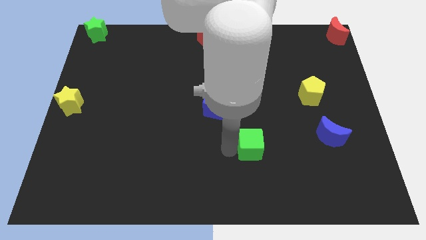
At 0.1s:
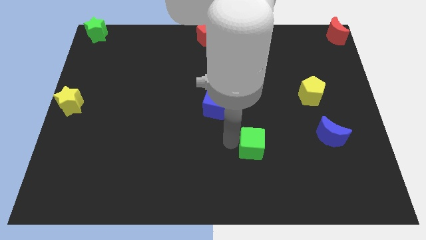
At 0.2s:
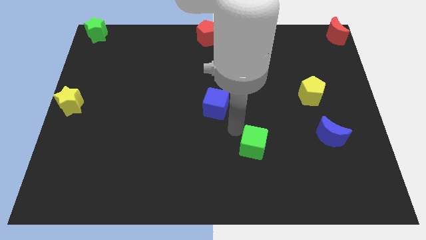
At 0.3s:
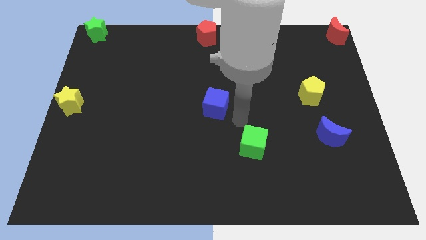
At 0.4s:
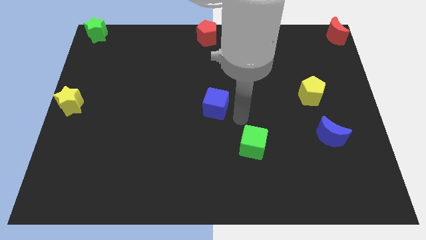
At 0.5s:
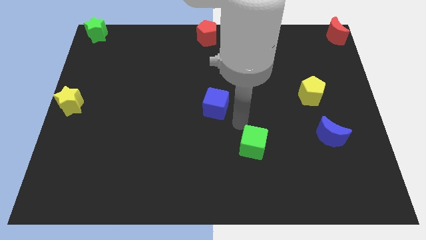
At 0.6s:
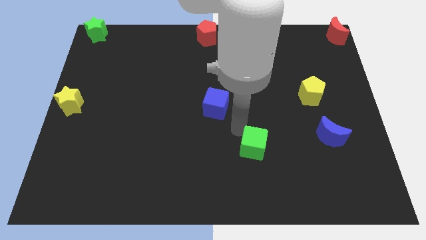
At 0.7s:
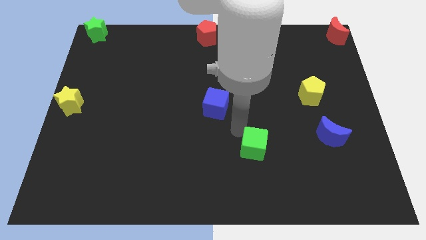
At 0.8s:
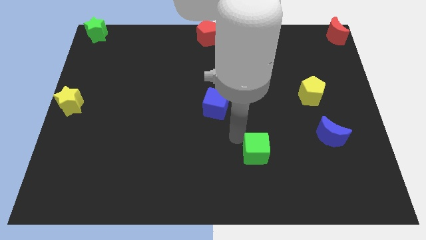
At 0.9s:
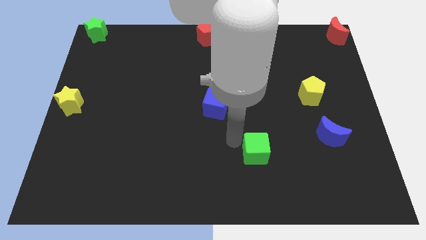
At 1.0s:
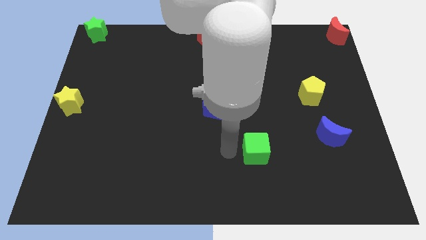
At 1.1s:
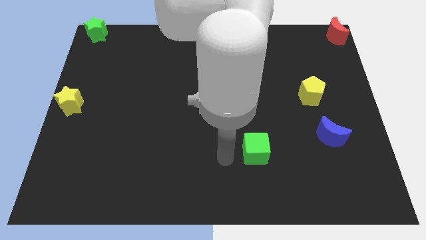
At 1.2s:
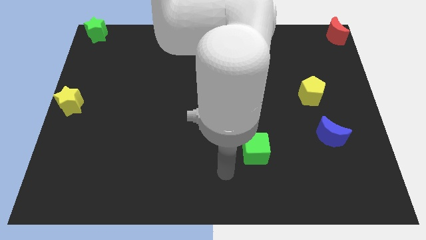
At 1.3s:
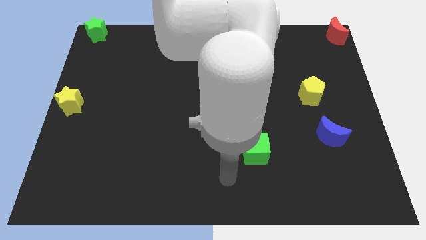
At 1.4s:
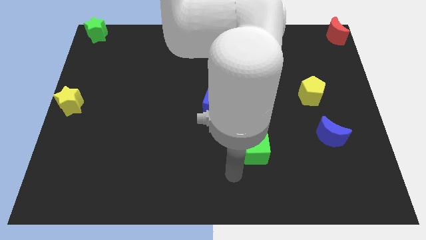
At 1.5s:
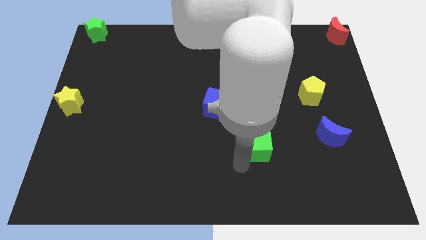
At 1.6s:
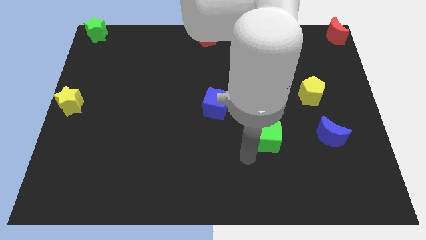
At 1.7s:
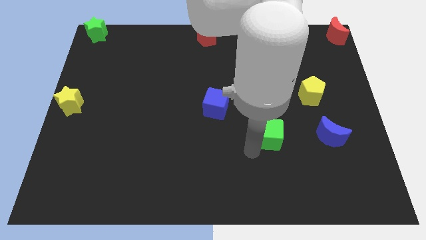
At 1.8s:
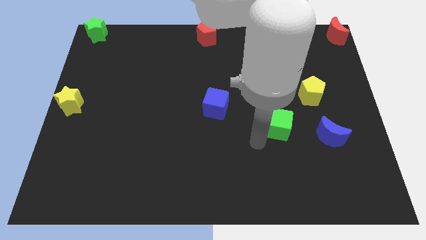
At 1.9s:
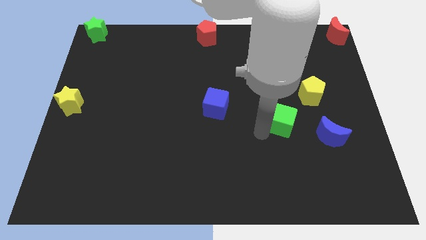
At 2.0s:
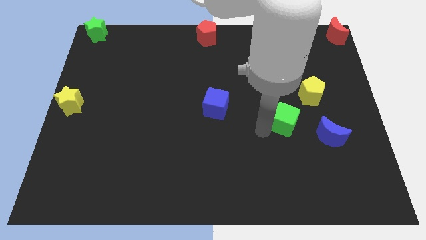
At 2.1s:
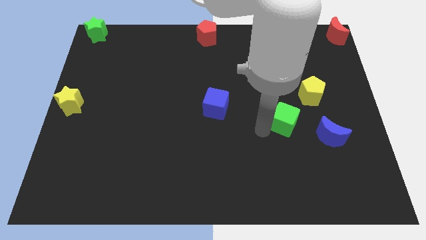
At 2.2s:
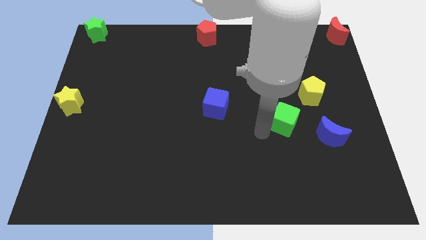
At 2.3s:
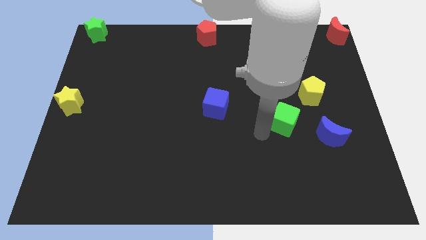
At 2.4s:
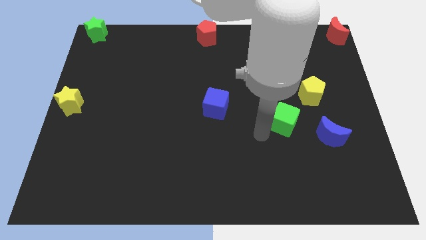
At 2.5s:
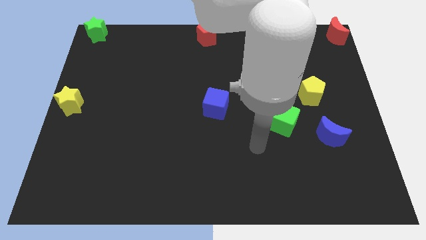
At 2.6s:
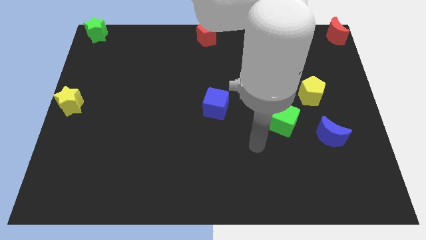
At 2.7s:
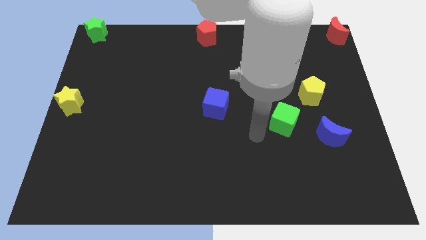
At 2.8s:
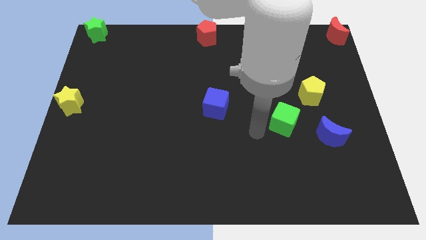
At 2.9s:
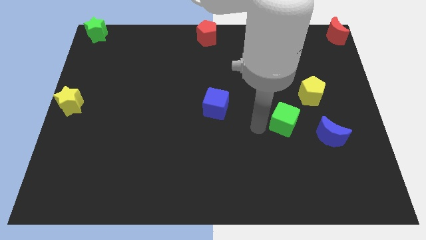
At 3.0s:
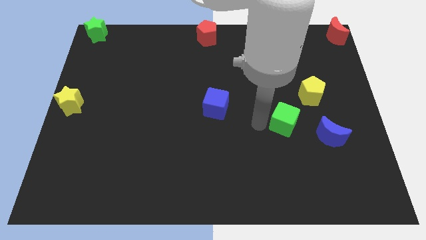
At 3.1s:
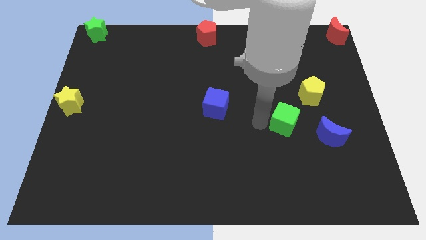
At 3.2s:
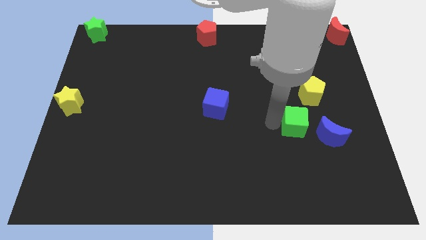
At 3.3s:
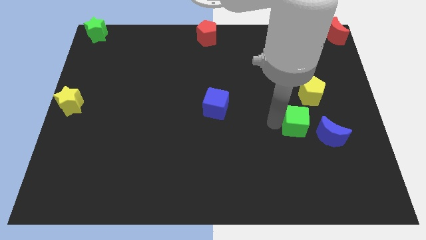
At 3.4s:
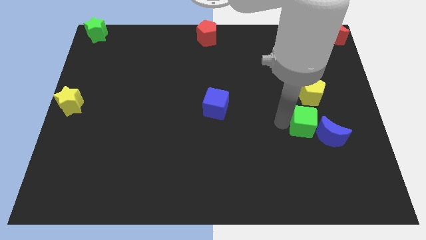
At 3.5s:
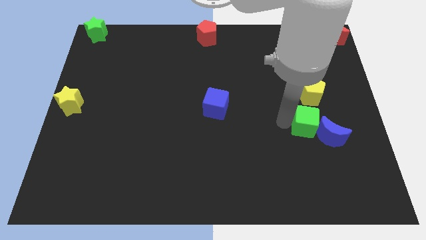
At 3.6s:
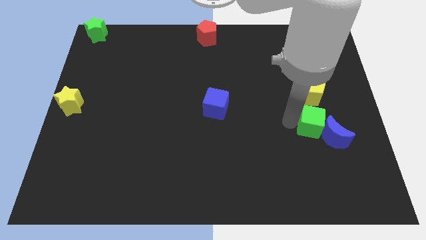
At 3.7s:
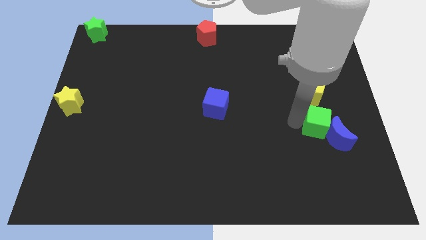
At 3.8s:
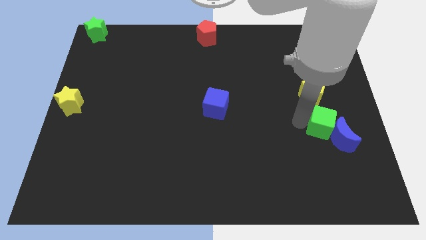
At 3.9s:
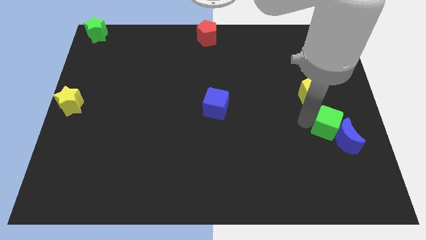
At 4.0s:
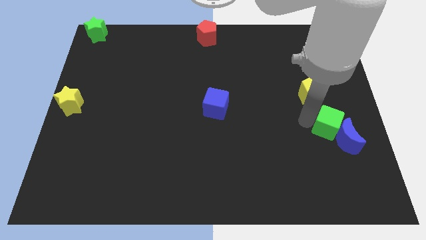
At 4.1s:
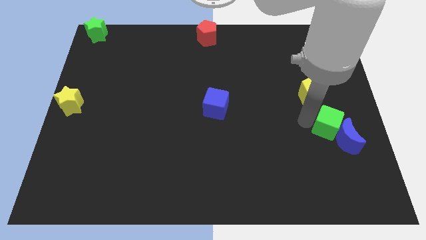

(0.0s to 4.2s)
push green cube to the top left of blue moon

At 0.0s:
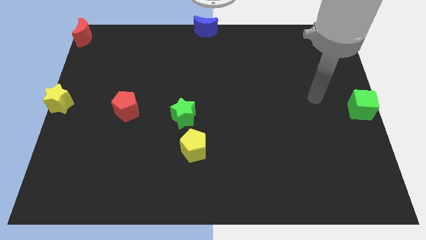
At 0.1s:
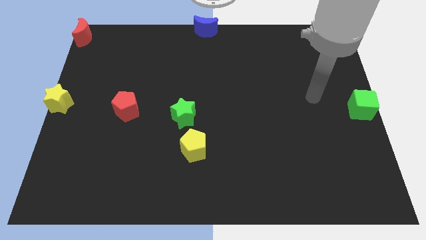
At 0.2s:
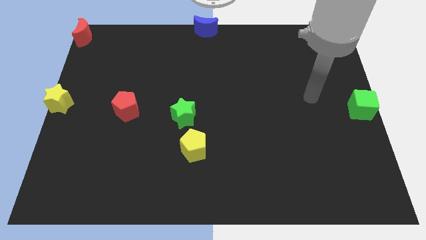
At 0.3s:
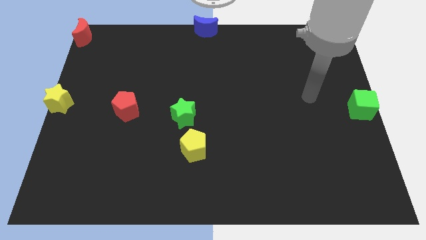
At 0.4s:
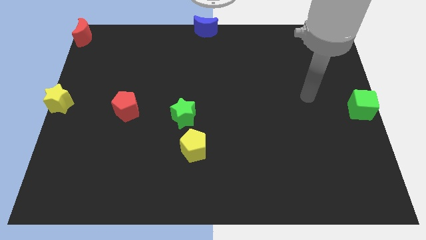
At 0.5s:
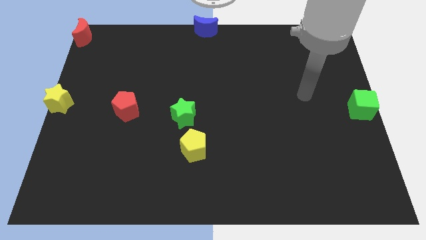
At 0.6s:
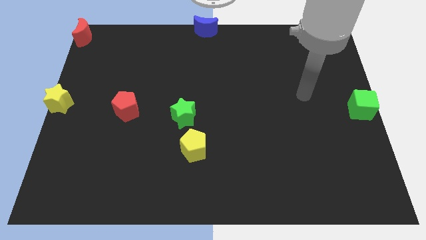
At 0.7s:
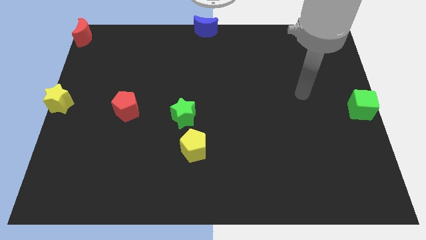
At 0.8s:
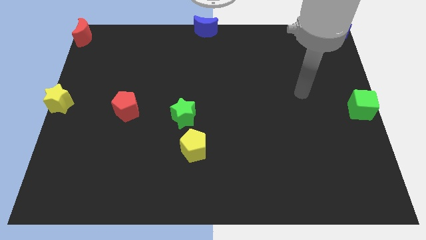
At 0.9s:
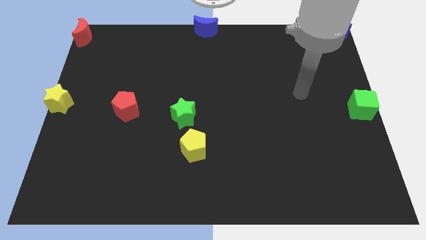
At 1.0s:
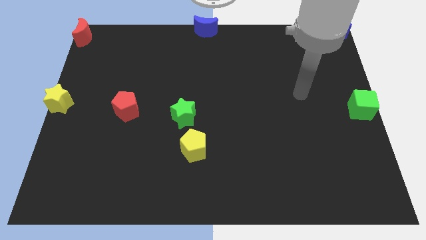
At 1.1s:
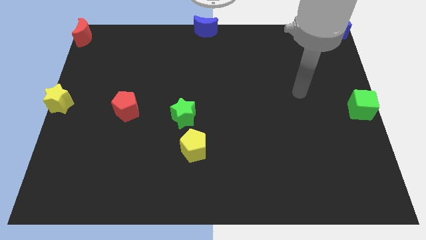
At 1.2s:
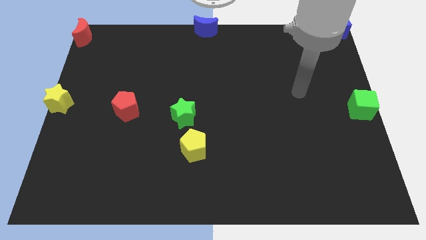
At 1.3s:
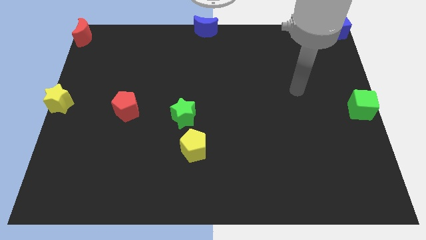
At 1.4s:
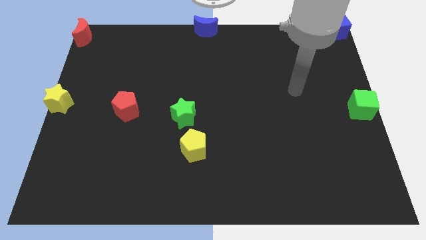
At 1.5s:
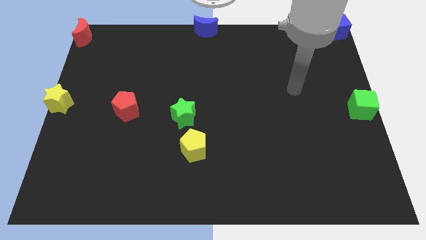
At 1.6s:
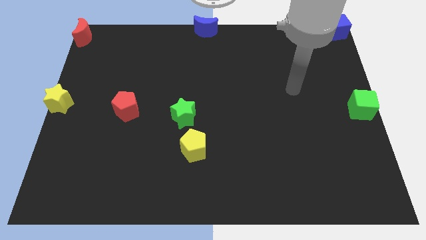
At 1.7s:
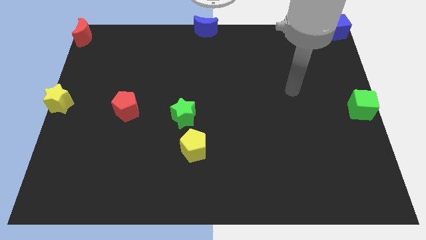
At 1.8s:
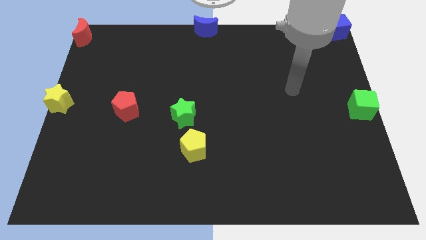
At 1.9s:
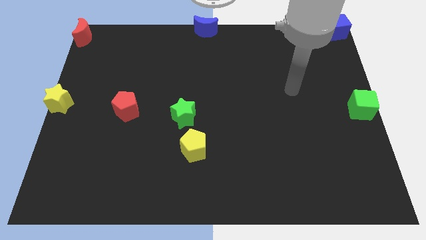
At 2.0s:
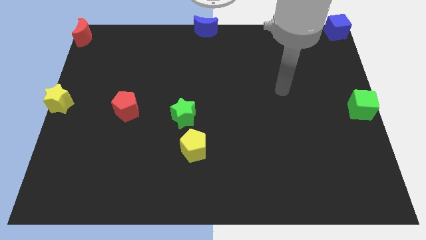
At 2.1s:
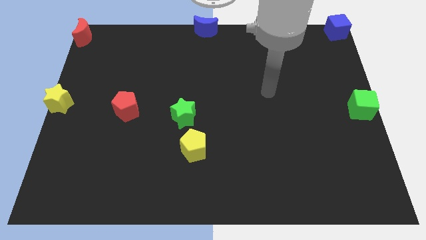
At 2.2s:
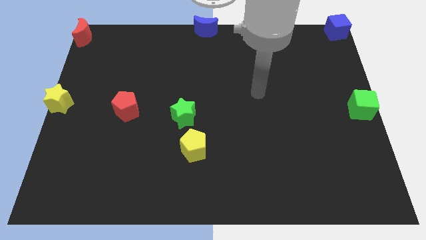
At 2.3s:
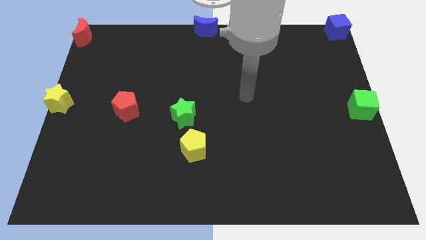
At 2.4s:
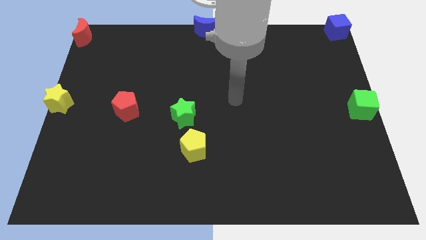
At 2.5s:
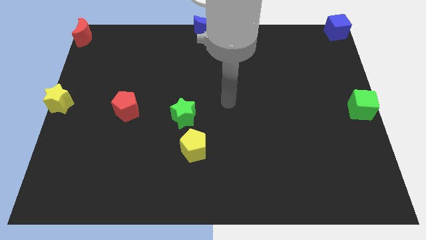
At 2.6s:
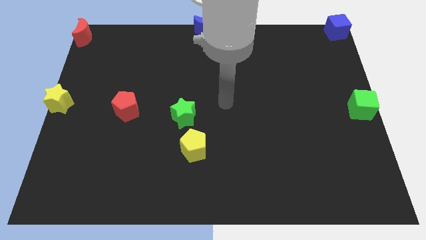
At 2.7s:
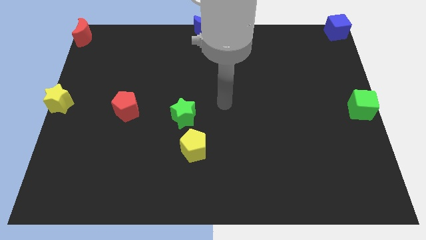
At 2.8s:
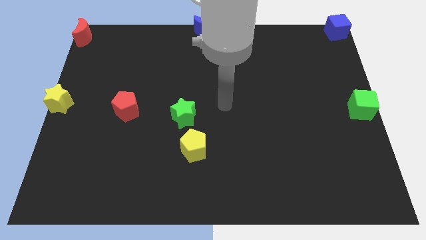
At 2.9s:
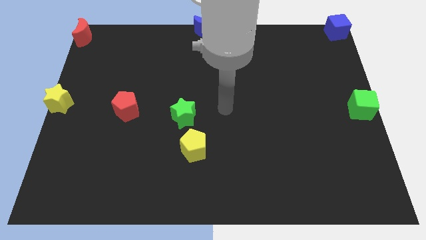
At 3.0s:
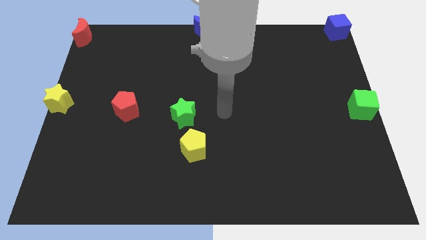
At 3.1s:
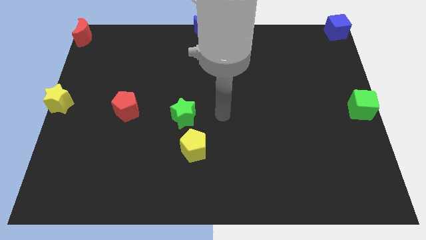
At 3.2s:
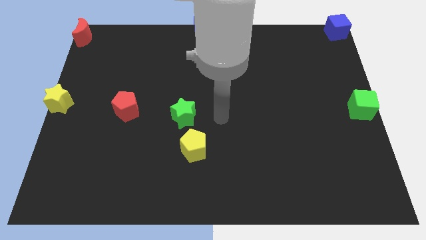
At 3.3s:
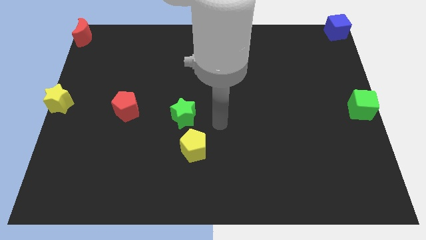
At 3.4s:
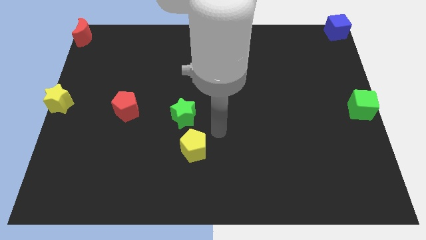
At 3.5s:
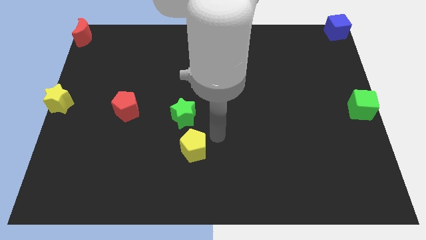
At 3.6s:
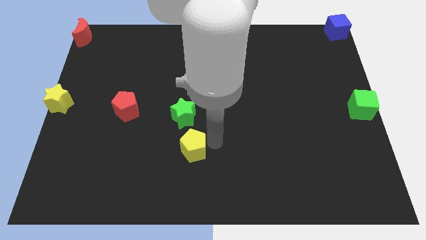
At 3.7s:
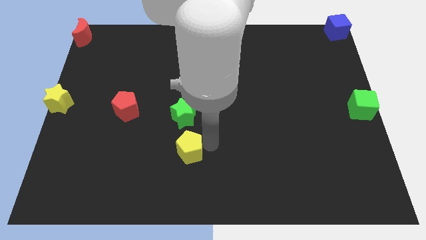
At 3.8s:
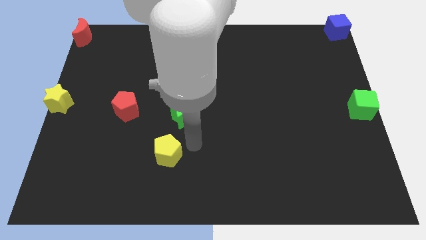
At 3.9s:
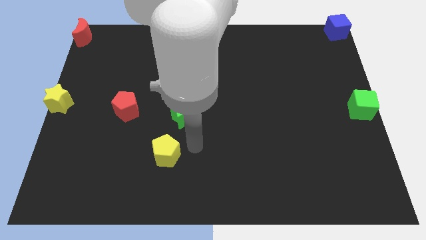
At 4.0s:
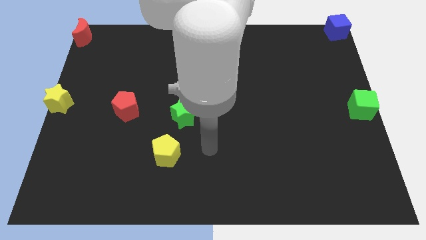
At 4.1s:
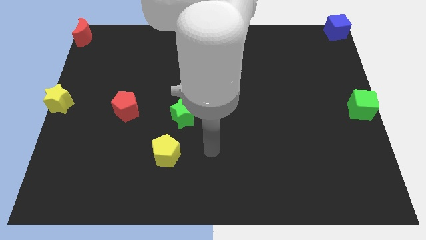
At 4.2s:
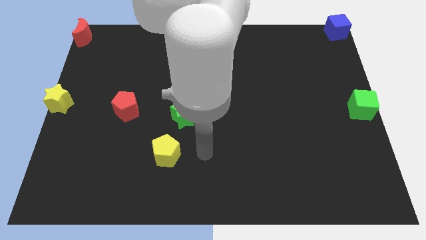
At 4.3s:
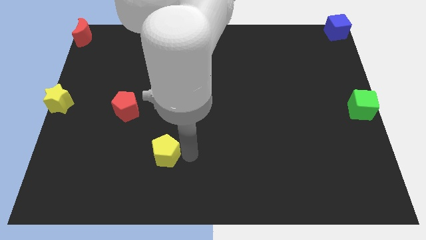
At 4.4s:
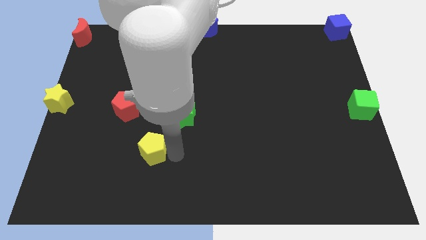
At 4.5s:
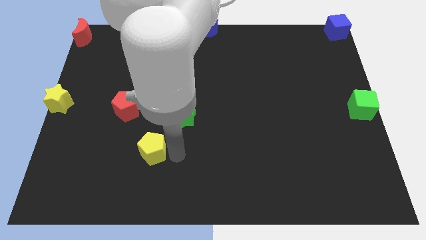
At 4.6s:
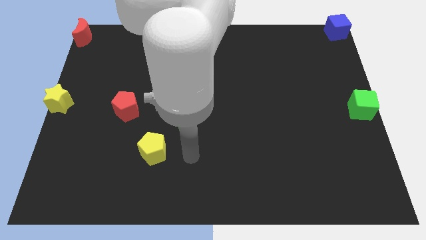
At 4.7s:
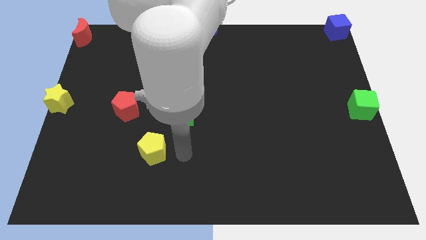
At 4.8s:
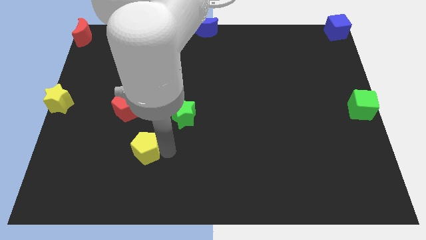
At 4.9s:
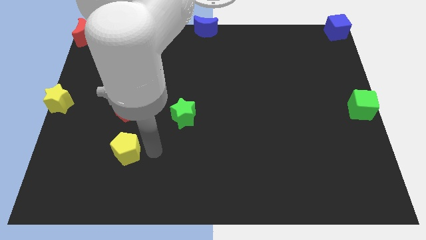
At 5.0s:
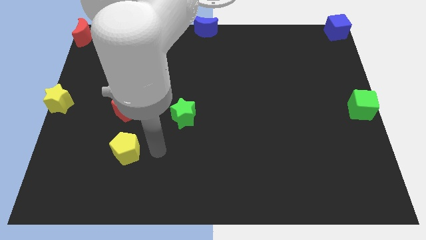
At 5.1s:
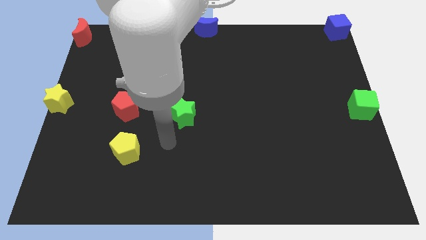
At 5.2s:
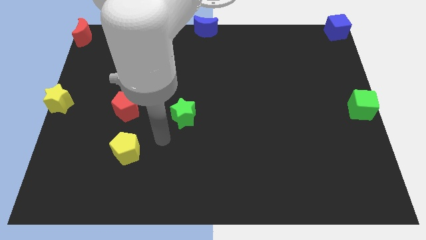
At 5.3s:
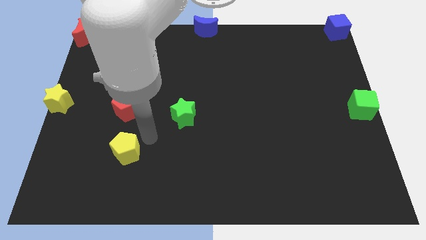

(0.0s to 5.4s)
move the yellow pentagon vertically below the red pentagon
